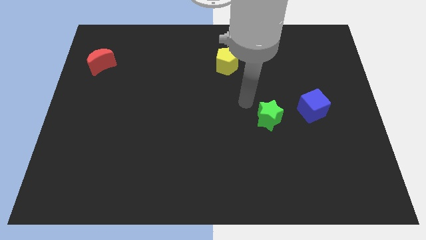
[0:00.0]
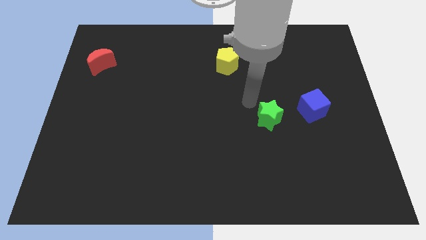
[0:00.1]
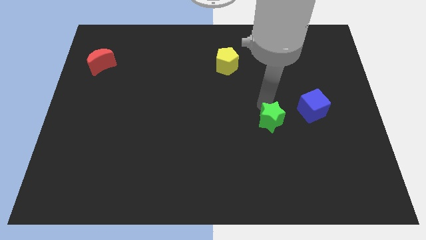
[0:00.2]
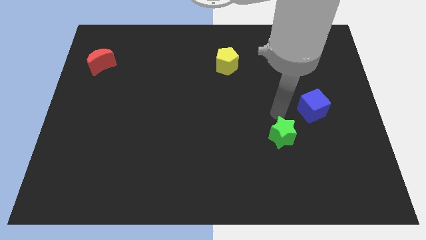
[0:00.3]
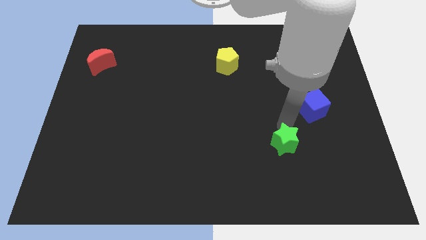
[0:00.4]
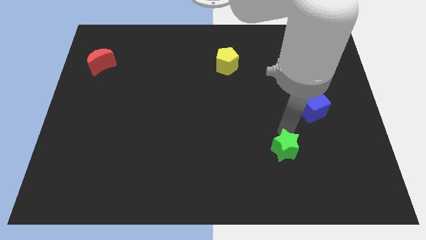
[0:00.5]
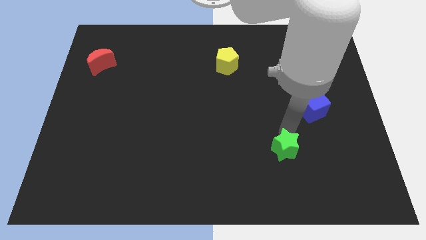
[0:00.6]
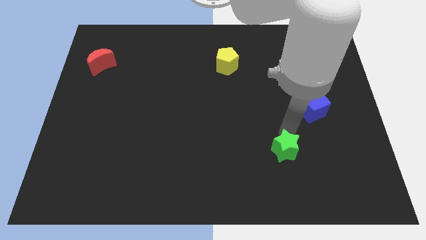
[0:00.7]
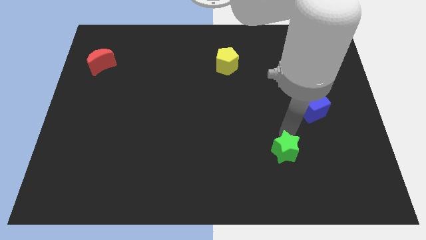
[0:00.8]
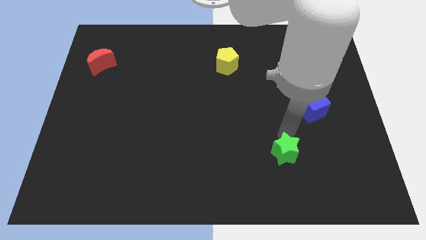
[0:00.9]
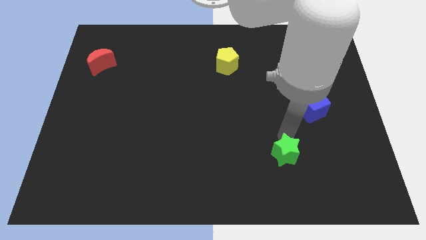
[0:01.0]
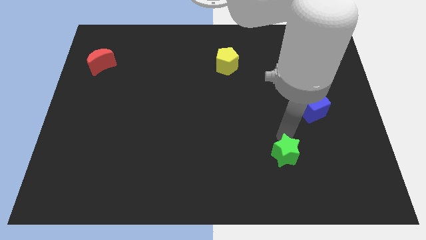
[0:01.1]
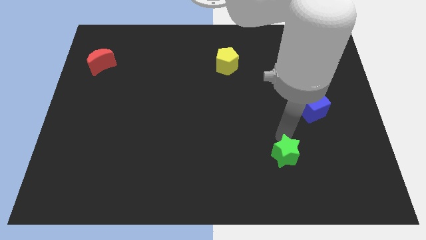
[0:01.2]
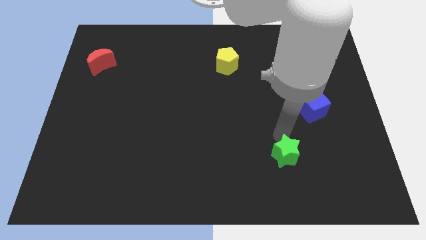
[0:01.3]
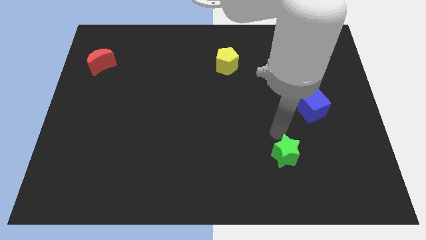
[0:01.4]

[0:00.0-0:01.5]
move the green star downwards

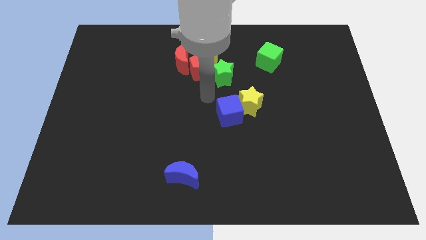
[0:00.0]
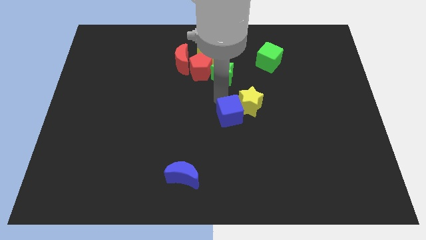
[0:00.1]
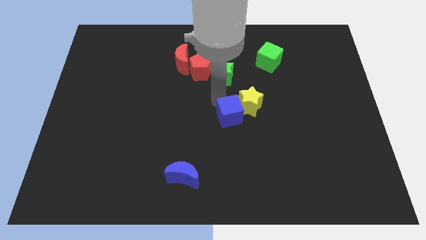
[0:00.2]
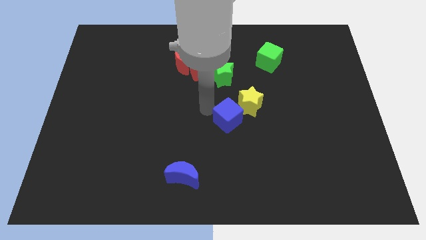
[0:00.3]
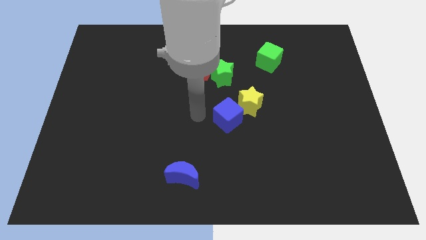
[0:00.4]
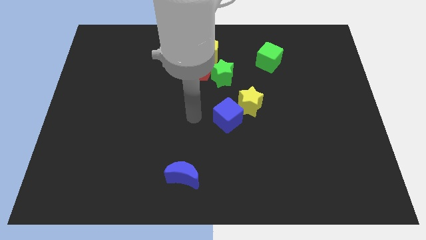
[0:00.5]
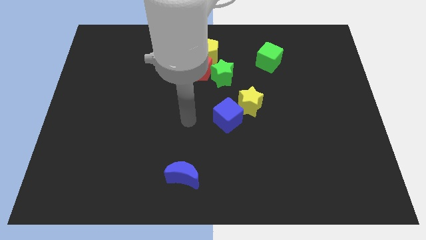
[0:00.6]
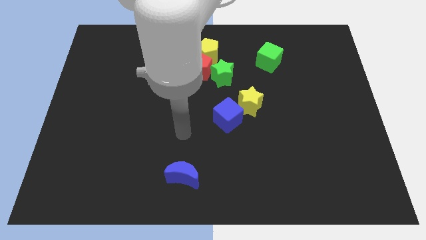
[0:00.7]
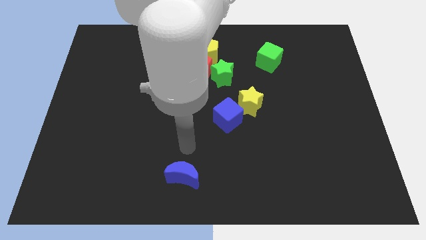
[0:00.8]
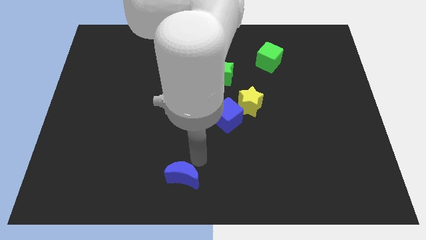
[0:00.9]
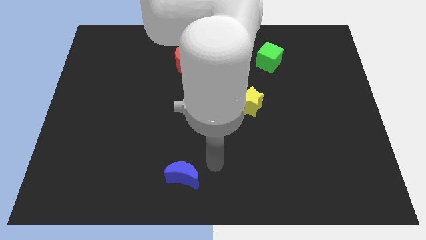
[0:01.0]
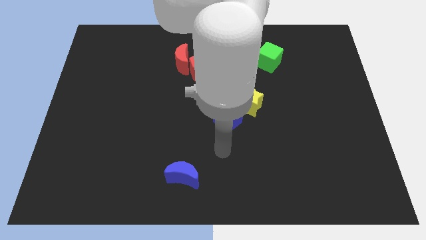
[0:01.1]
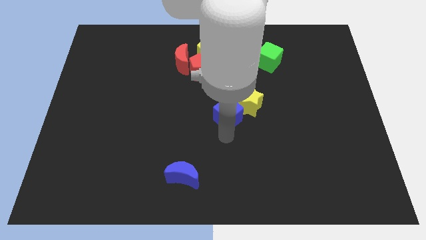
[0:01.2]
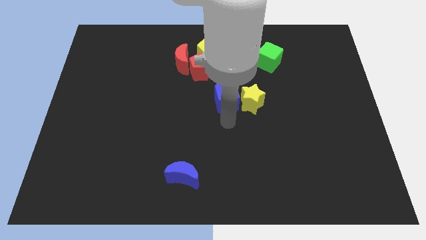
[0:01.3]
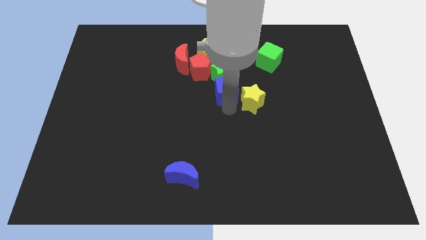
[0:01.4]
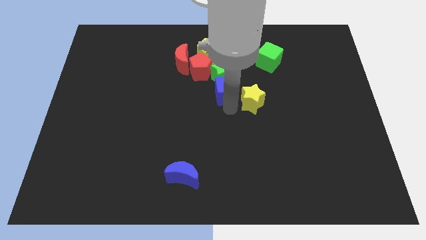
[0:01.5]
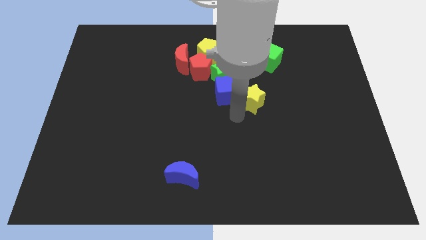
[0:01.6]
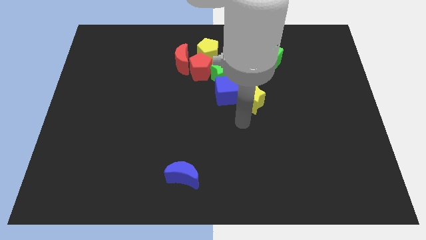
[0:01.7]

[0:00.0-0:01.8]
push the blue cube into the green star

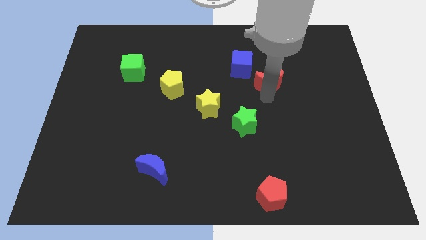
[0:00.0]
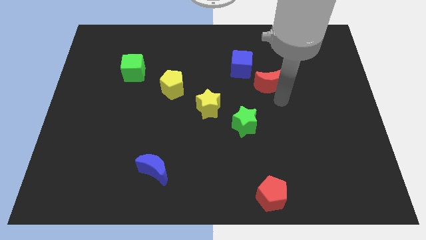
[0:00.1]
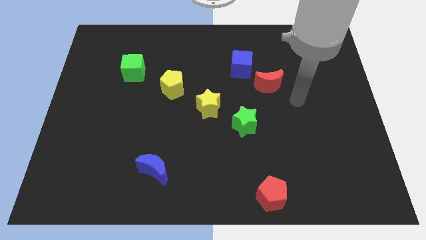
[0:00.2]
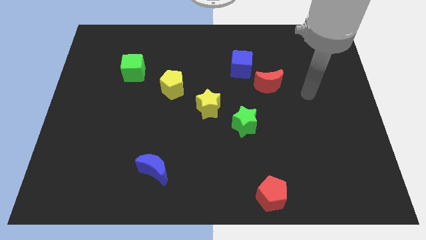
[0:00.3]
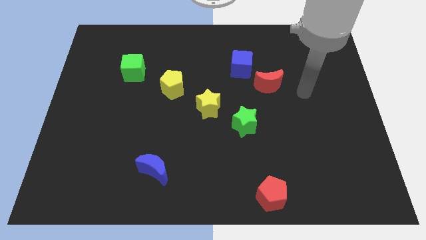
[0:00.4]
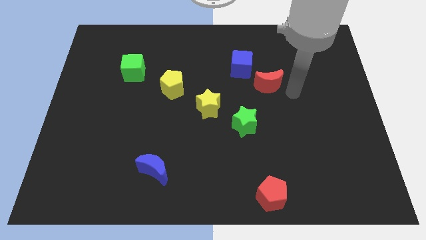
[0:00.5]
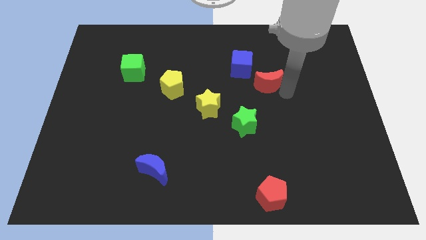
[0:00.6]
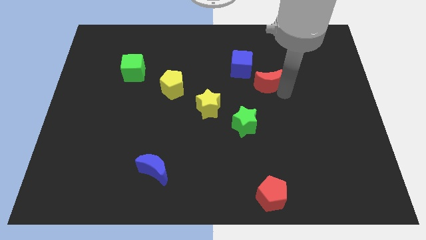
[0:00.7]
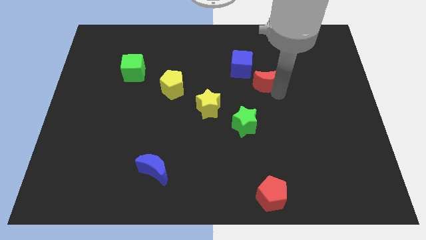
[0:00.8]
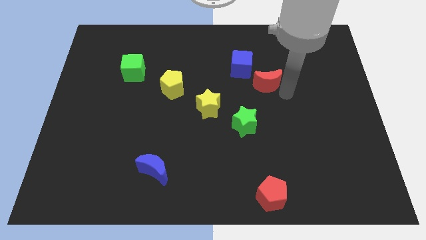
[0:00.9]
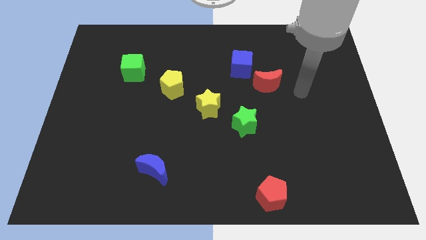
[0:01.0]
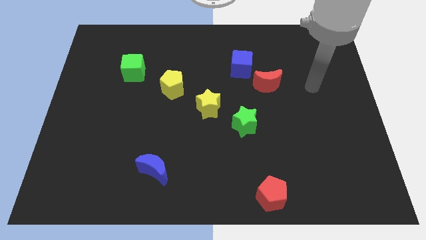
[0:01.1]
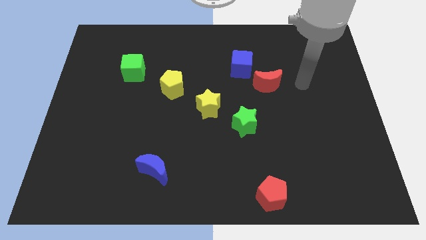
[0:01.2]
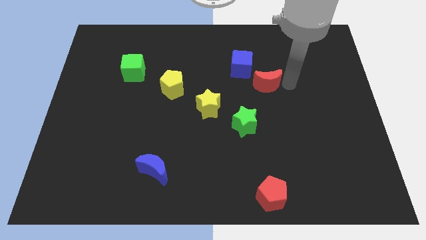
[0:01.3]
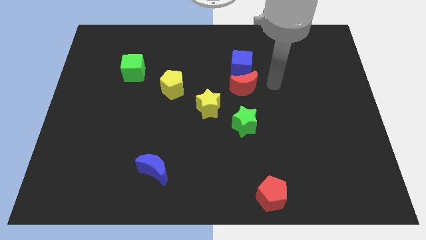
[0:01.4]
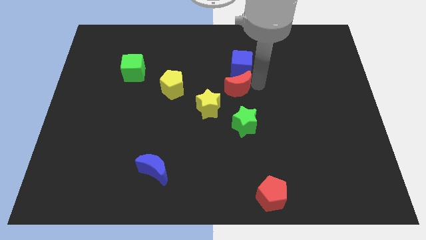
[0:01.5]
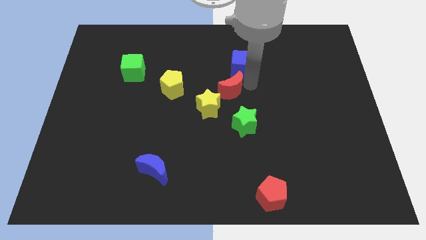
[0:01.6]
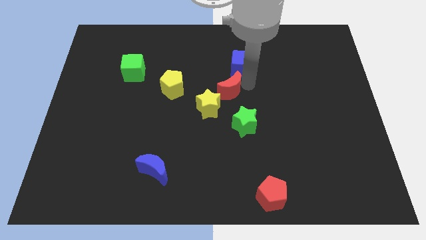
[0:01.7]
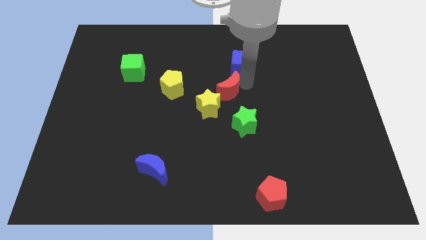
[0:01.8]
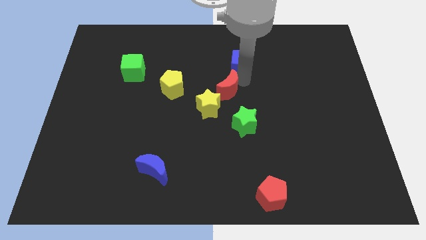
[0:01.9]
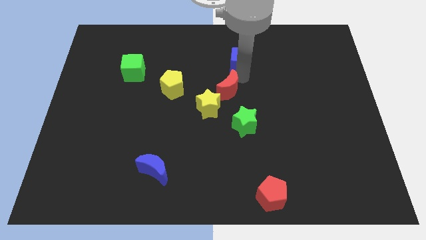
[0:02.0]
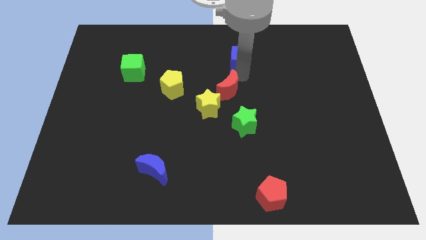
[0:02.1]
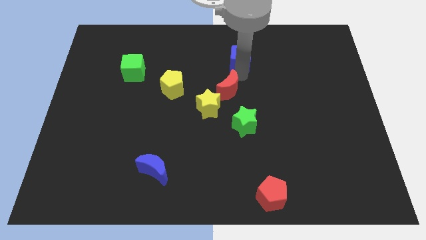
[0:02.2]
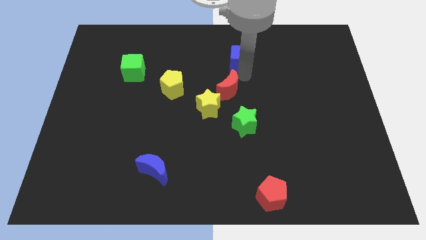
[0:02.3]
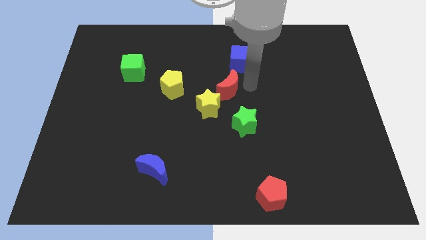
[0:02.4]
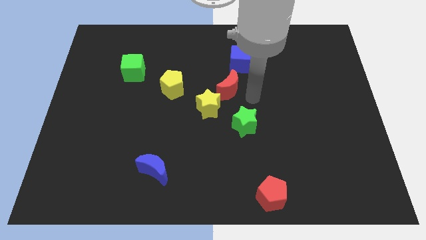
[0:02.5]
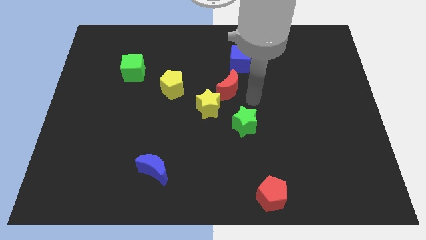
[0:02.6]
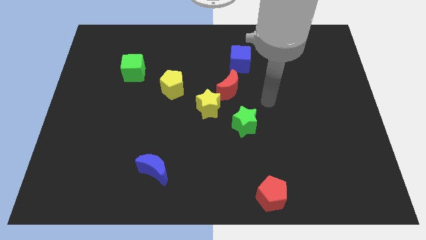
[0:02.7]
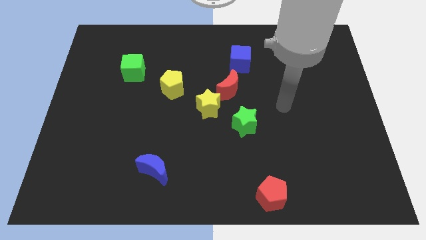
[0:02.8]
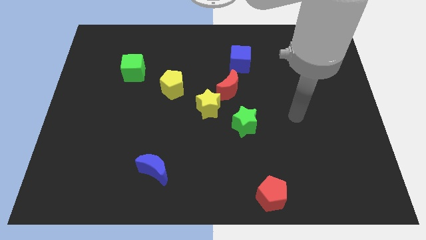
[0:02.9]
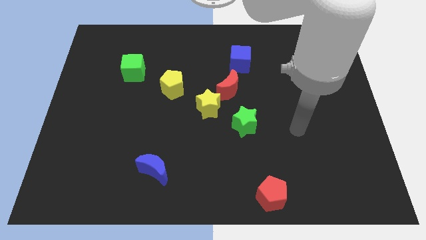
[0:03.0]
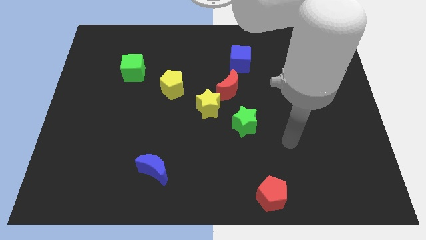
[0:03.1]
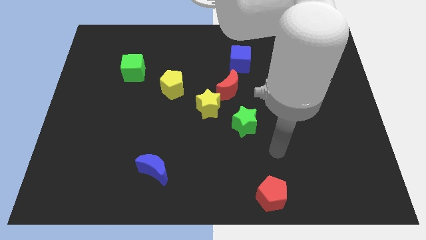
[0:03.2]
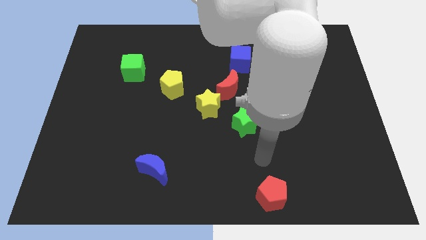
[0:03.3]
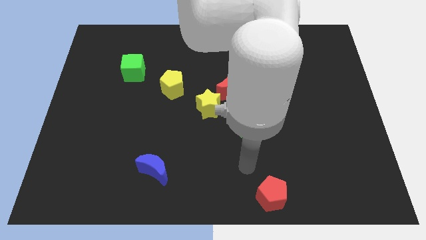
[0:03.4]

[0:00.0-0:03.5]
place red moon near yellow star

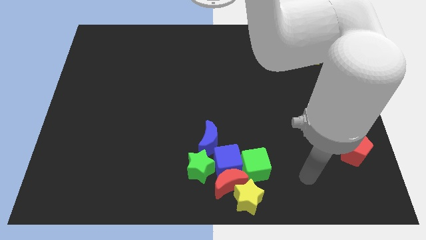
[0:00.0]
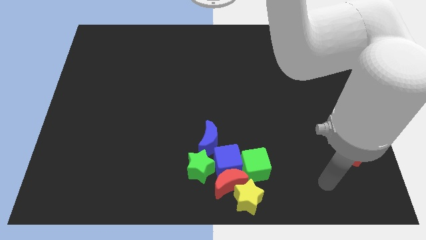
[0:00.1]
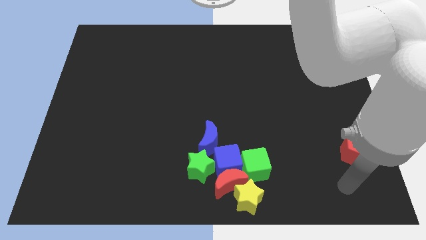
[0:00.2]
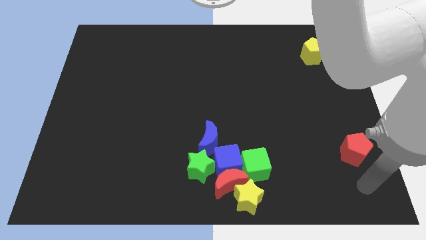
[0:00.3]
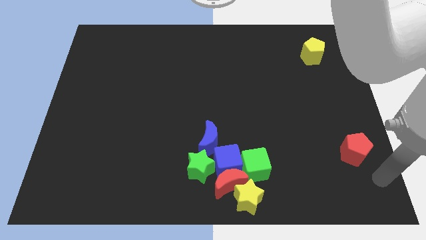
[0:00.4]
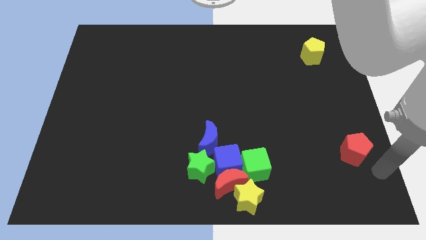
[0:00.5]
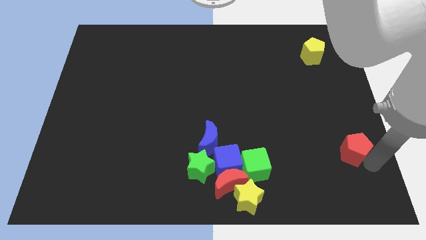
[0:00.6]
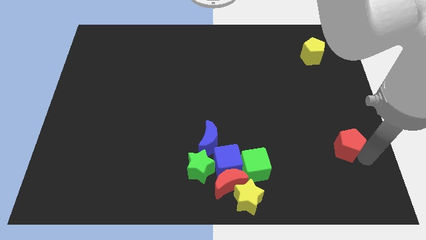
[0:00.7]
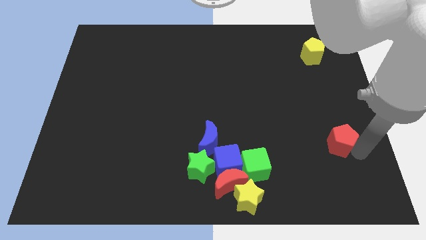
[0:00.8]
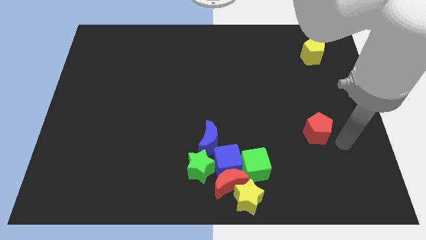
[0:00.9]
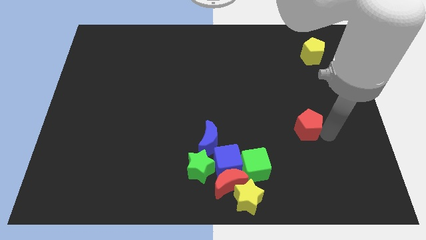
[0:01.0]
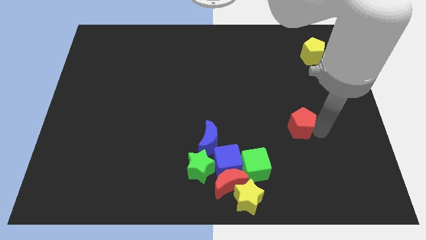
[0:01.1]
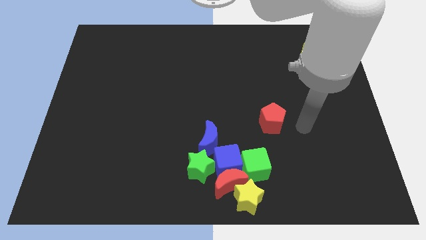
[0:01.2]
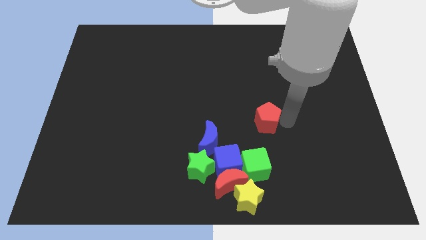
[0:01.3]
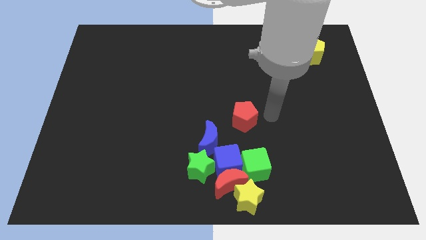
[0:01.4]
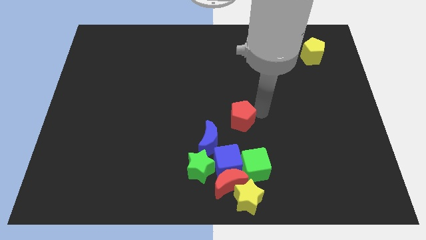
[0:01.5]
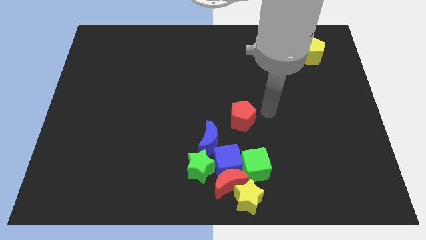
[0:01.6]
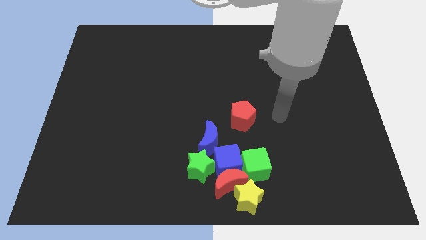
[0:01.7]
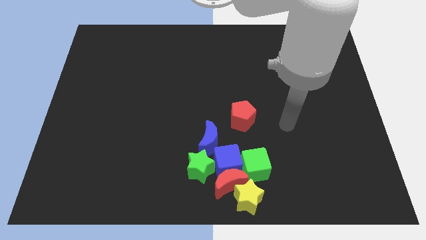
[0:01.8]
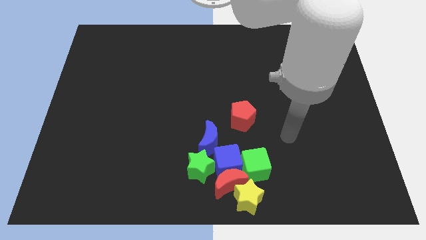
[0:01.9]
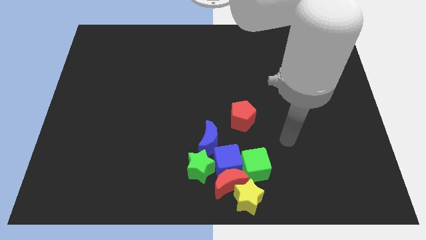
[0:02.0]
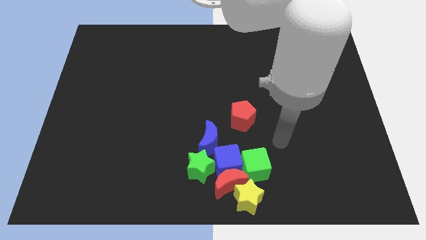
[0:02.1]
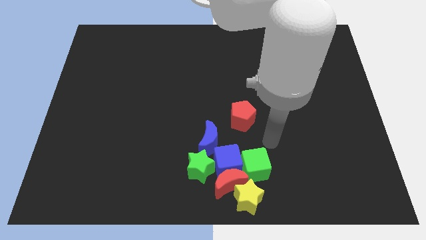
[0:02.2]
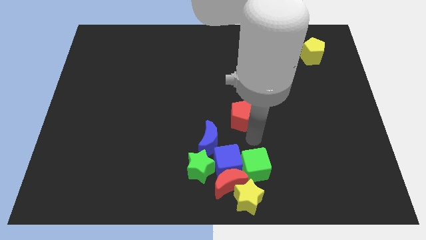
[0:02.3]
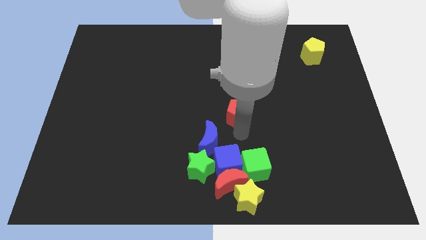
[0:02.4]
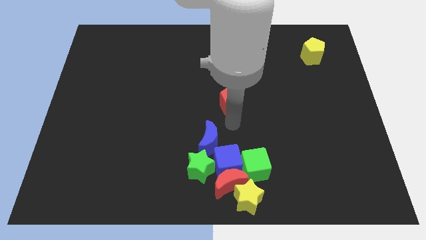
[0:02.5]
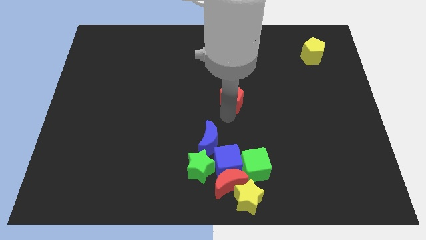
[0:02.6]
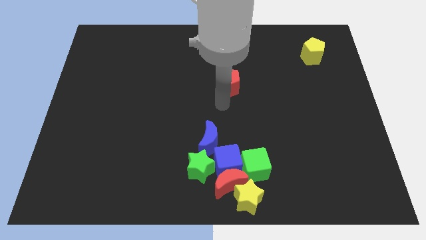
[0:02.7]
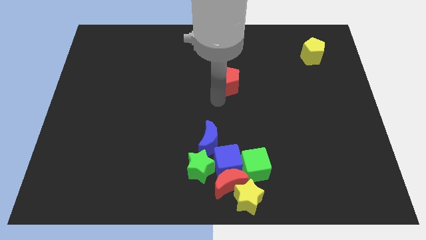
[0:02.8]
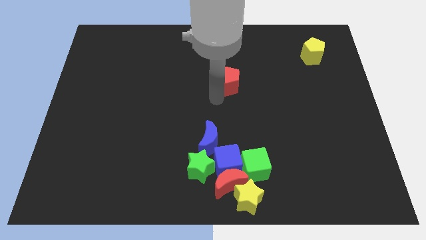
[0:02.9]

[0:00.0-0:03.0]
push the red pentagon to the above of the blue crescent
